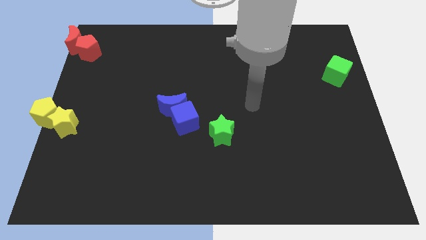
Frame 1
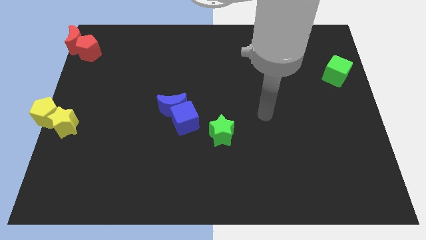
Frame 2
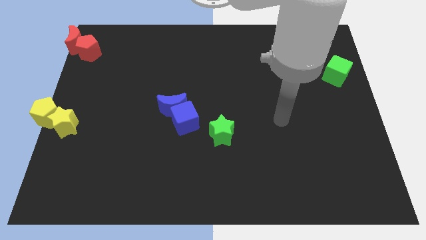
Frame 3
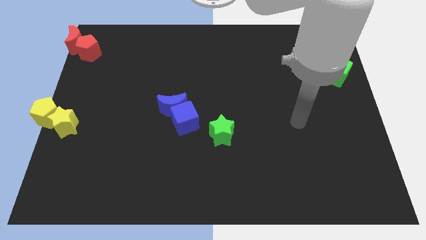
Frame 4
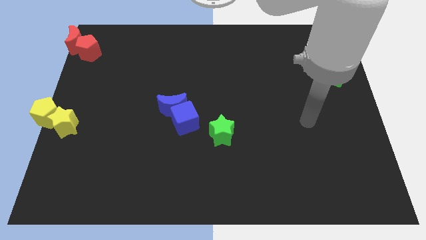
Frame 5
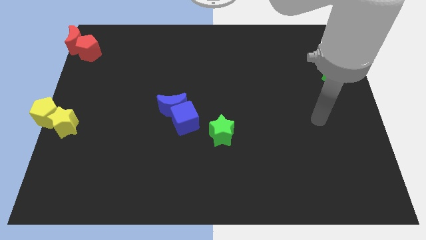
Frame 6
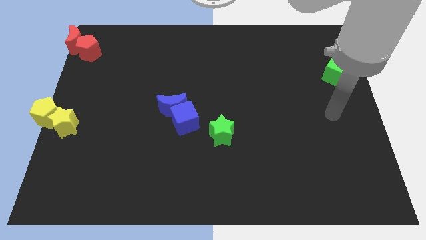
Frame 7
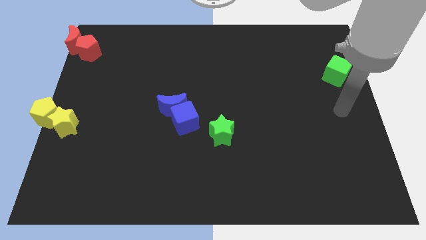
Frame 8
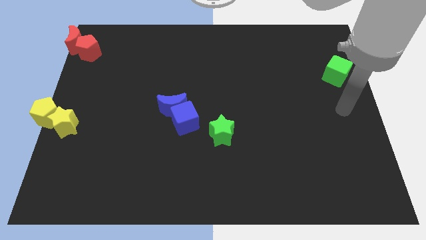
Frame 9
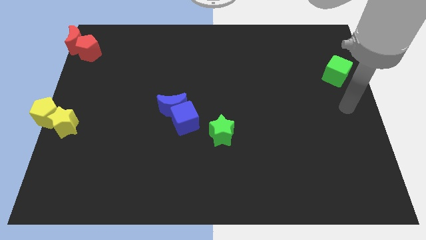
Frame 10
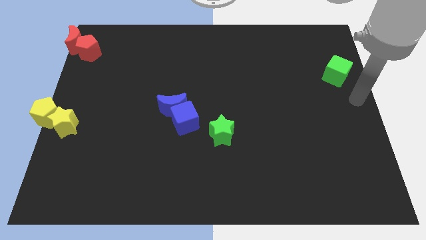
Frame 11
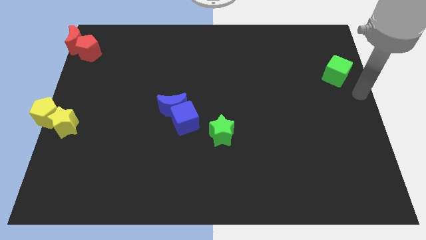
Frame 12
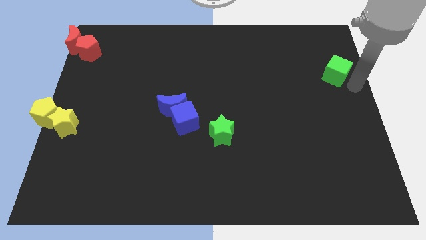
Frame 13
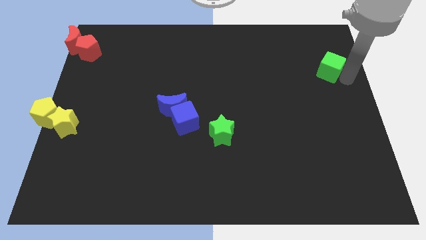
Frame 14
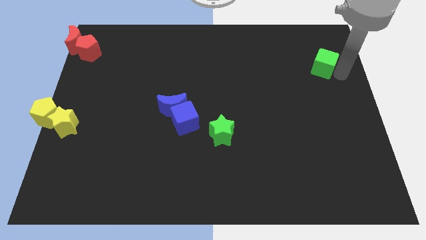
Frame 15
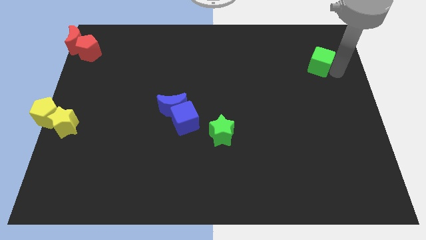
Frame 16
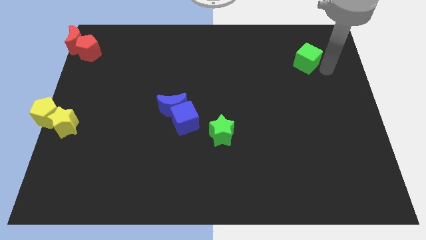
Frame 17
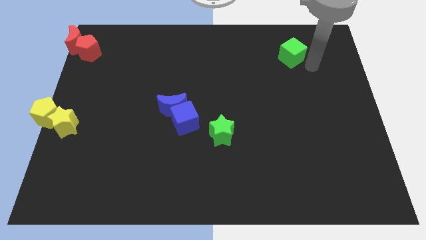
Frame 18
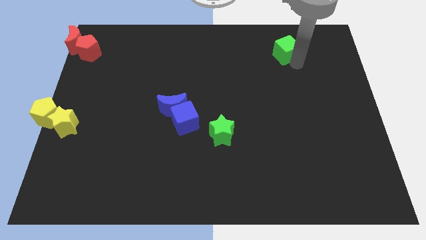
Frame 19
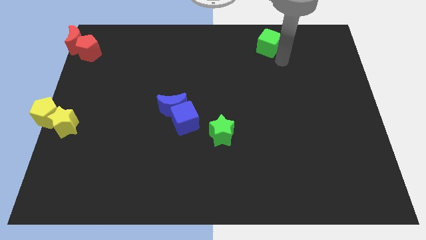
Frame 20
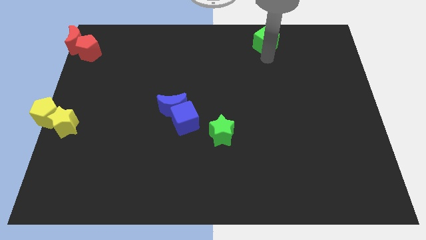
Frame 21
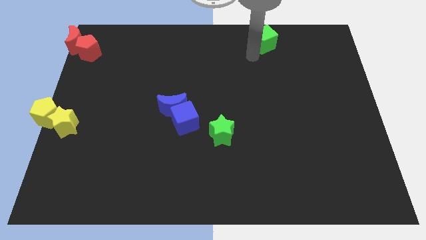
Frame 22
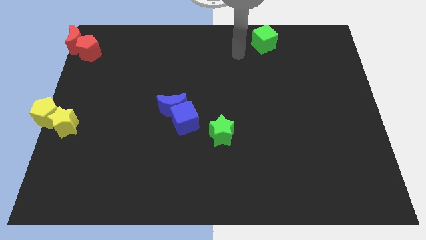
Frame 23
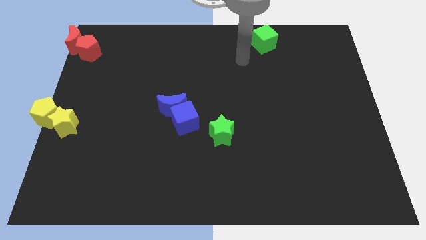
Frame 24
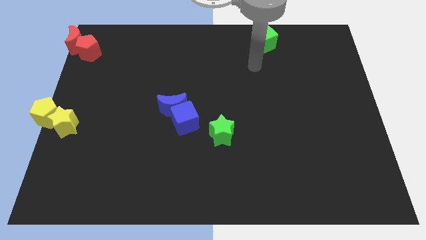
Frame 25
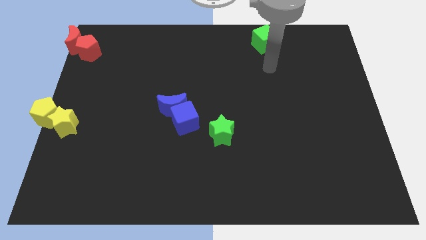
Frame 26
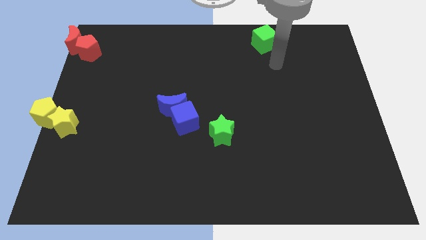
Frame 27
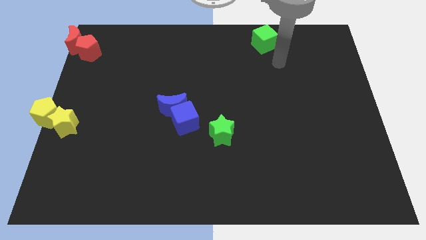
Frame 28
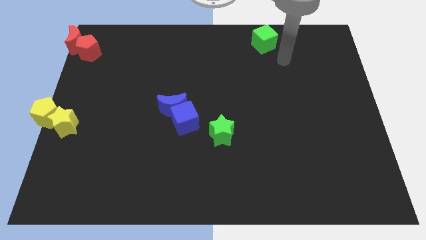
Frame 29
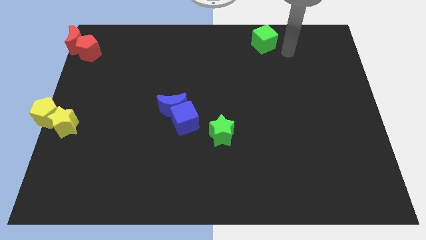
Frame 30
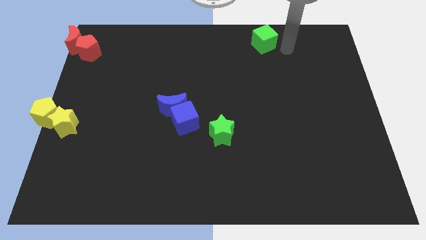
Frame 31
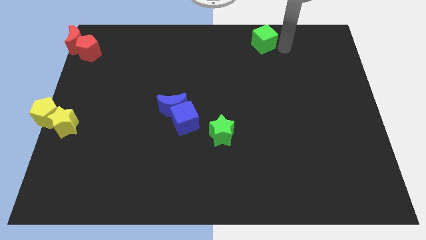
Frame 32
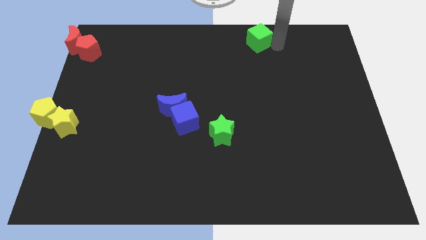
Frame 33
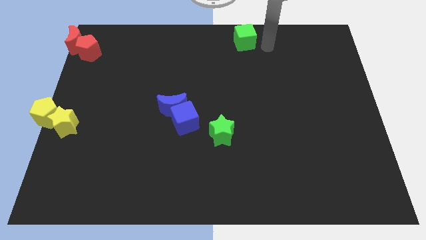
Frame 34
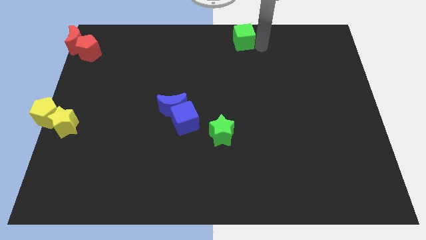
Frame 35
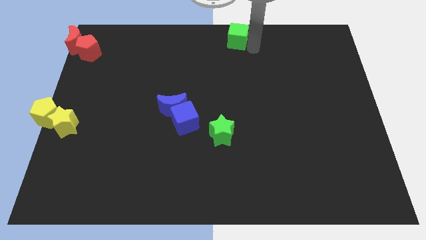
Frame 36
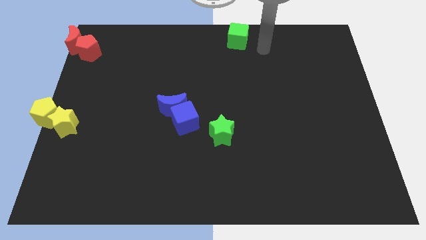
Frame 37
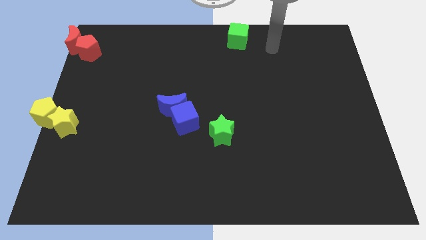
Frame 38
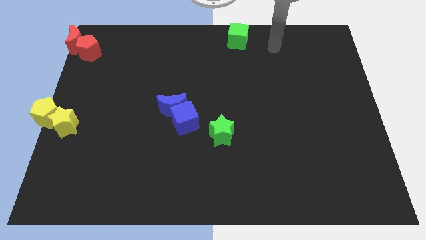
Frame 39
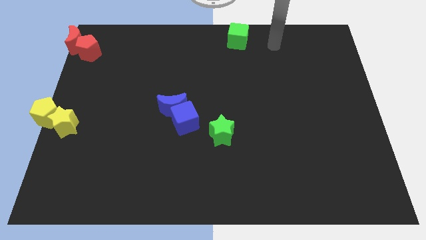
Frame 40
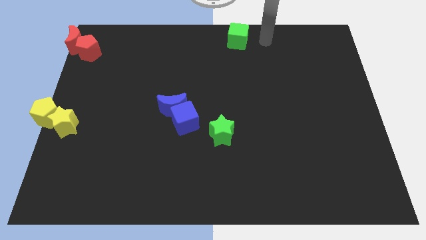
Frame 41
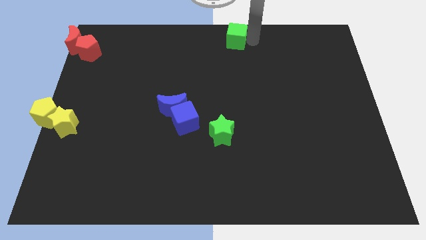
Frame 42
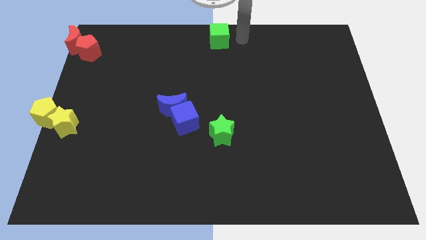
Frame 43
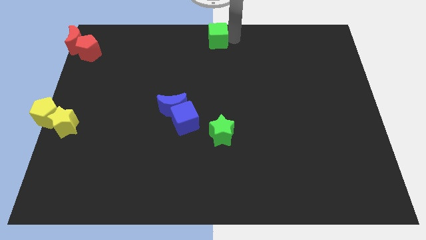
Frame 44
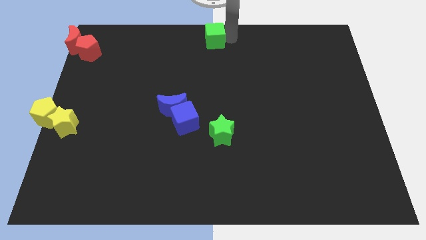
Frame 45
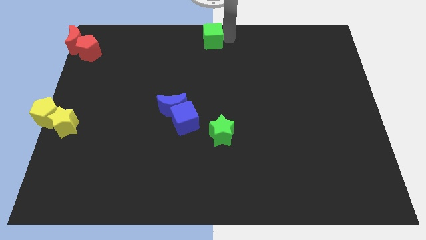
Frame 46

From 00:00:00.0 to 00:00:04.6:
push the green cube to the top center

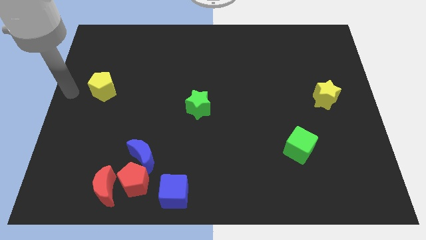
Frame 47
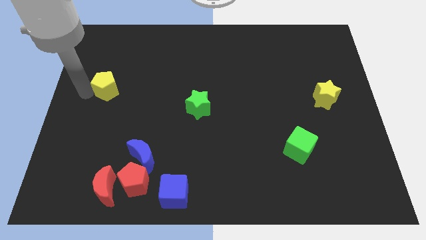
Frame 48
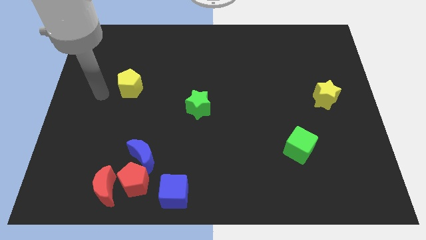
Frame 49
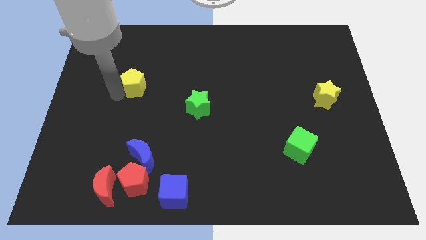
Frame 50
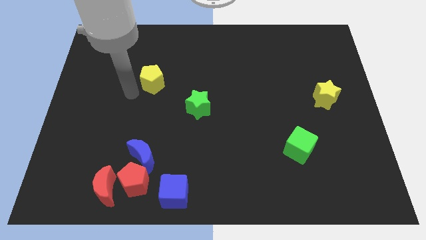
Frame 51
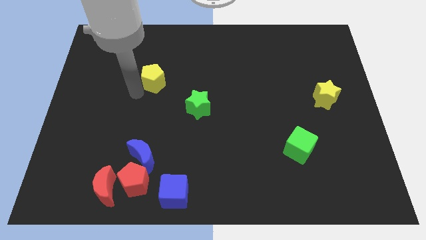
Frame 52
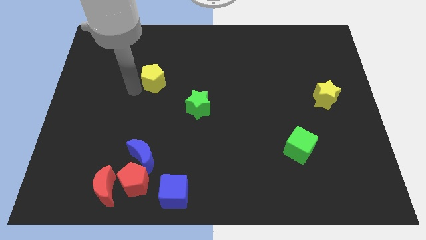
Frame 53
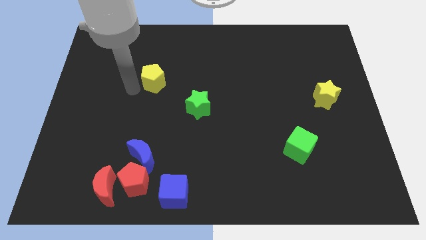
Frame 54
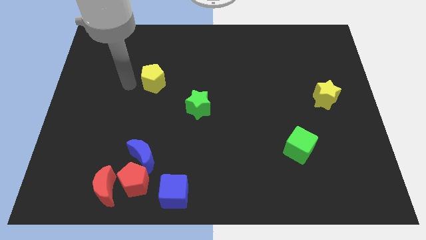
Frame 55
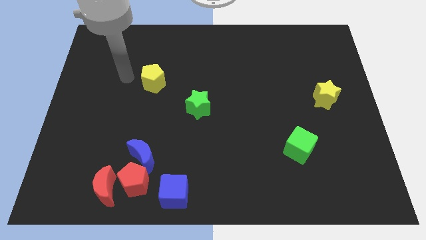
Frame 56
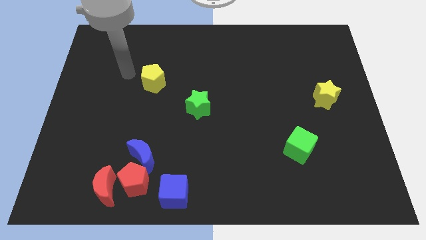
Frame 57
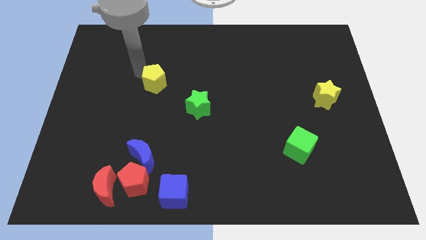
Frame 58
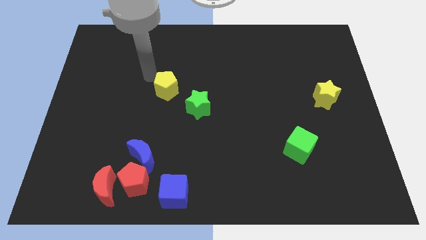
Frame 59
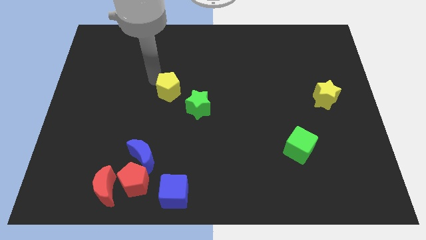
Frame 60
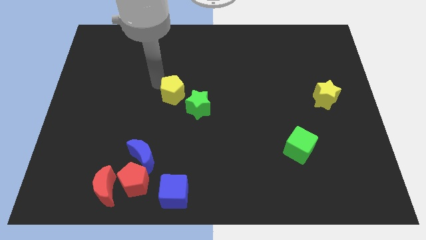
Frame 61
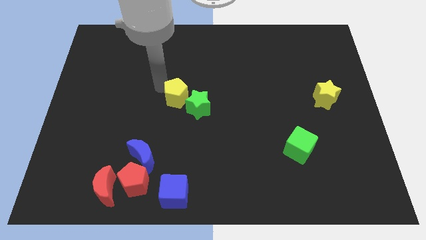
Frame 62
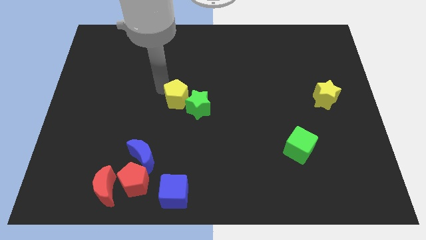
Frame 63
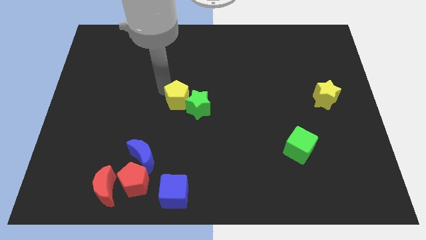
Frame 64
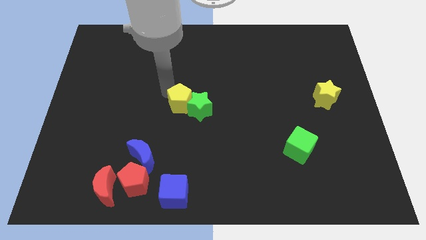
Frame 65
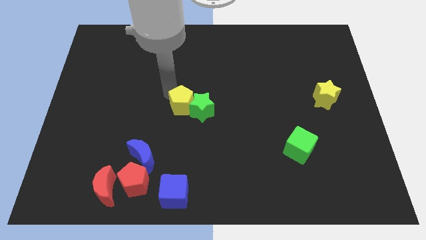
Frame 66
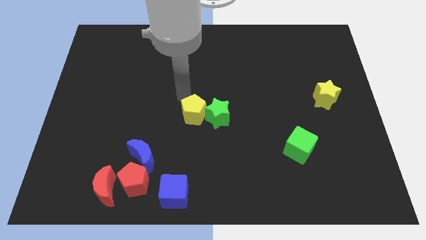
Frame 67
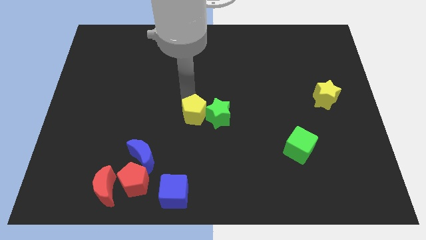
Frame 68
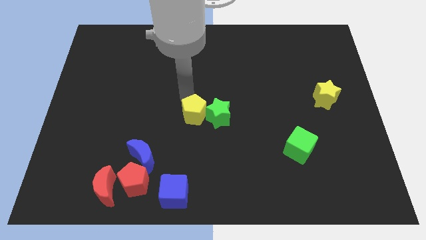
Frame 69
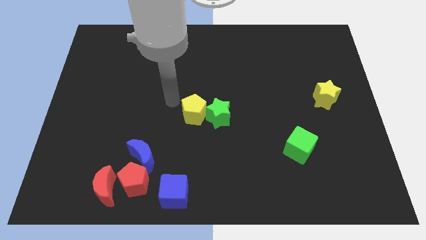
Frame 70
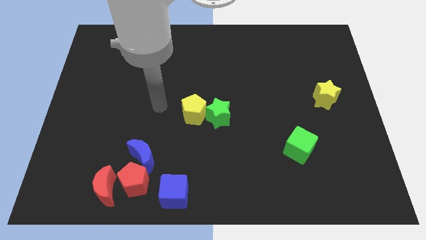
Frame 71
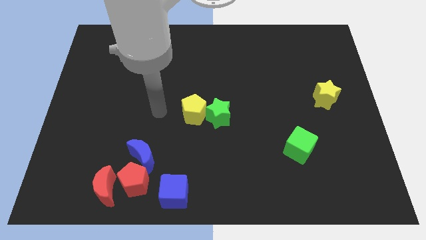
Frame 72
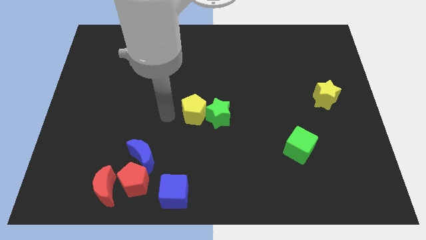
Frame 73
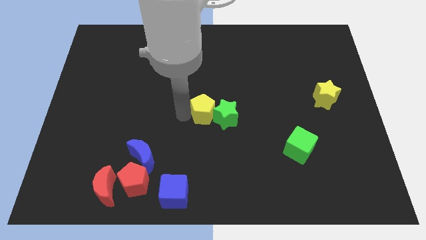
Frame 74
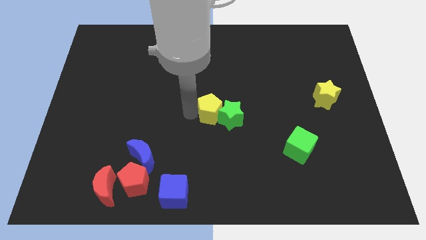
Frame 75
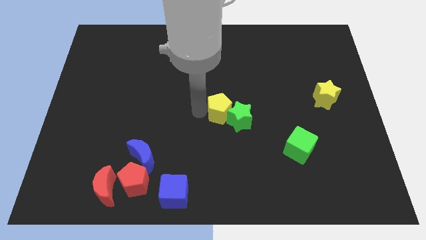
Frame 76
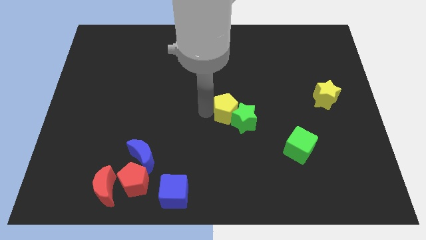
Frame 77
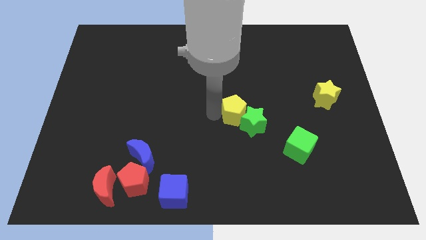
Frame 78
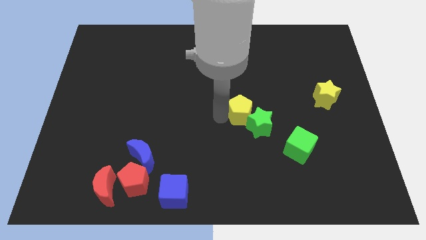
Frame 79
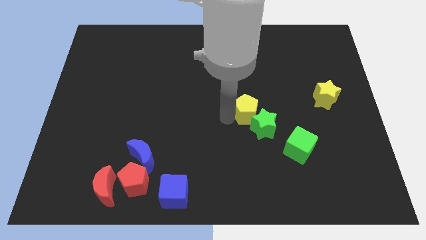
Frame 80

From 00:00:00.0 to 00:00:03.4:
push the yellow pentagon and green star diagonally on the top left side of the green cube

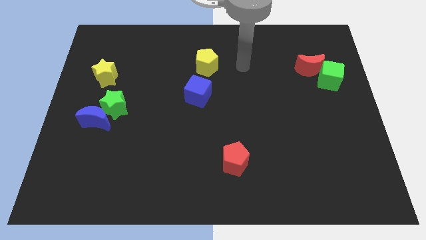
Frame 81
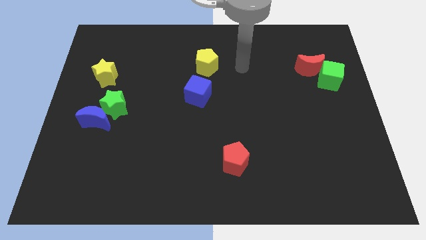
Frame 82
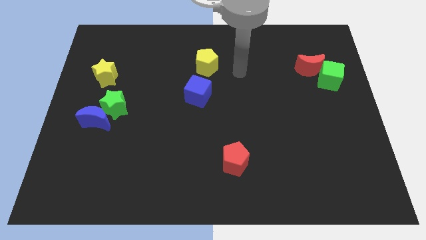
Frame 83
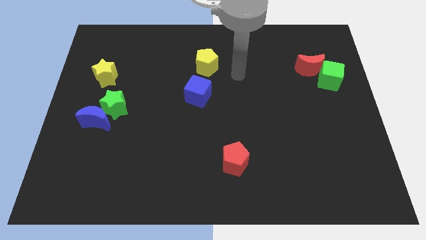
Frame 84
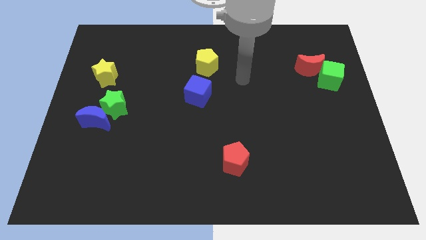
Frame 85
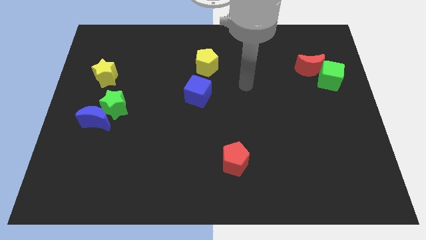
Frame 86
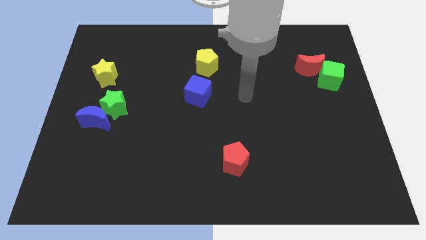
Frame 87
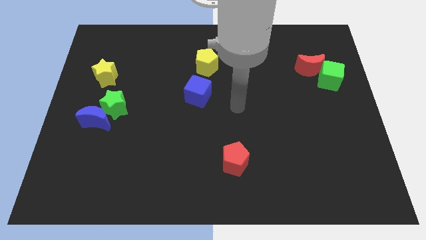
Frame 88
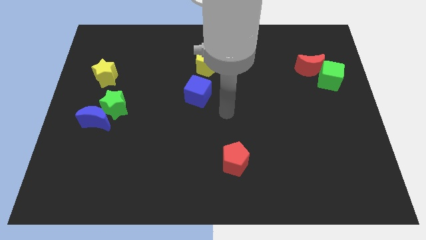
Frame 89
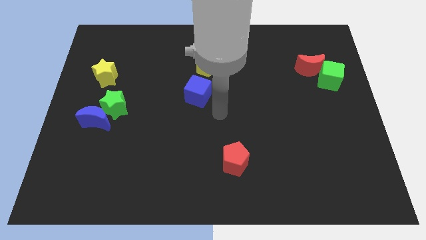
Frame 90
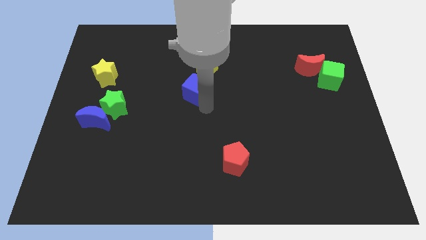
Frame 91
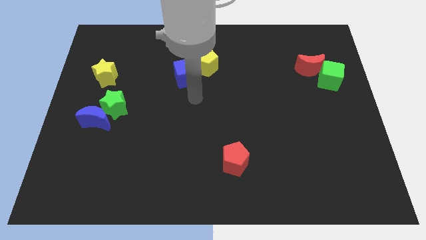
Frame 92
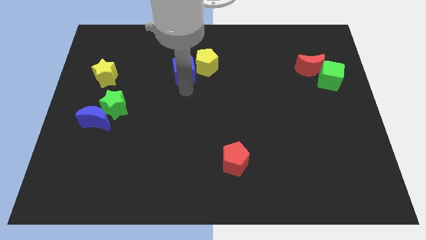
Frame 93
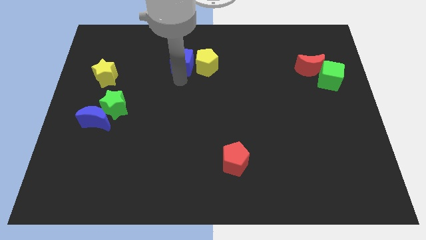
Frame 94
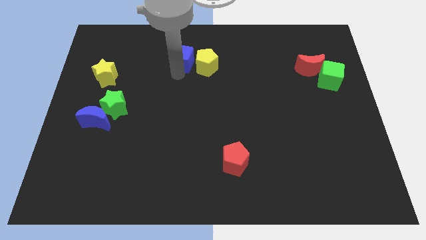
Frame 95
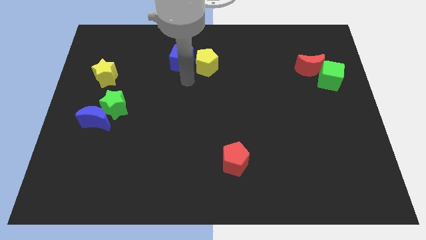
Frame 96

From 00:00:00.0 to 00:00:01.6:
place the blue cube beside the yellow pentagon
